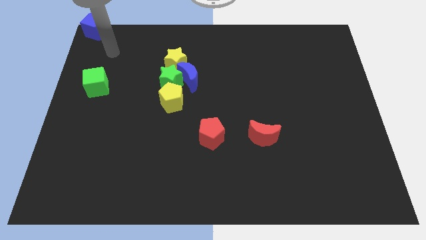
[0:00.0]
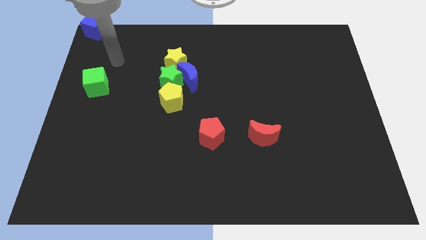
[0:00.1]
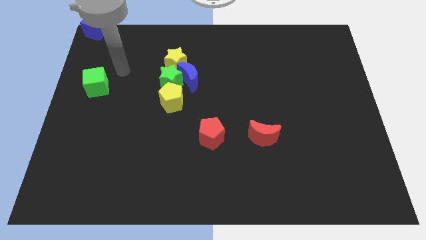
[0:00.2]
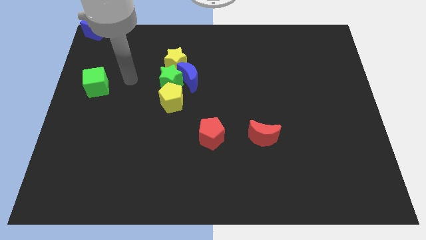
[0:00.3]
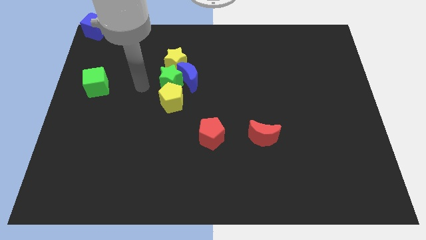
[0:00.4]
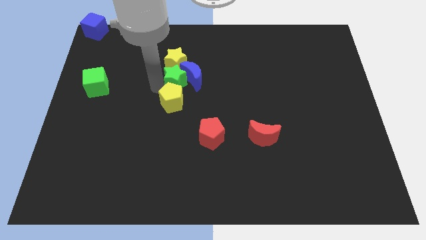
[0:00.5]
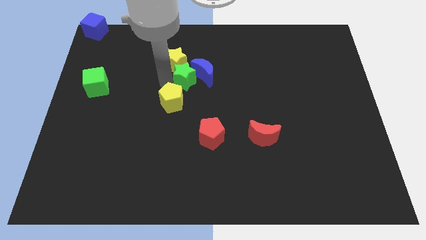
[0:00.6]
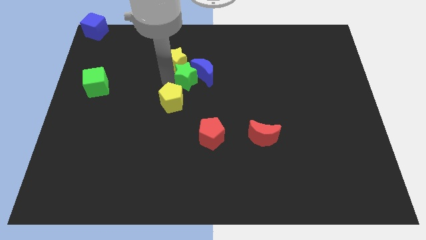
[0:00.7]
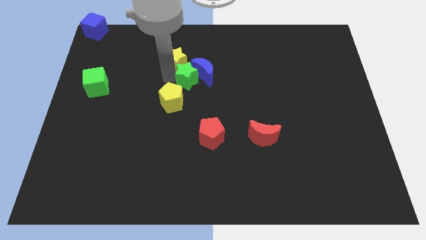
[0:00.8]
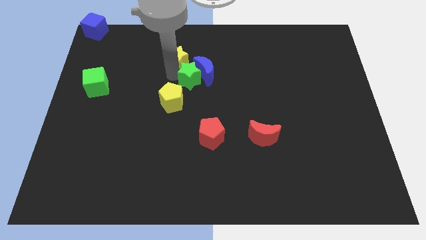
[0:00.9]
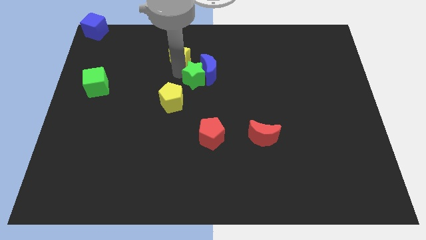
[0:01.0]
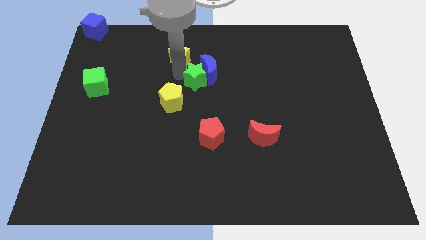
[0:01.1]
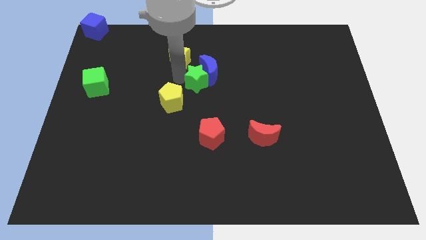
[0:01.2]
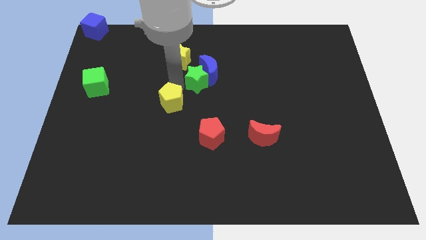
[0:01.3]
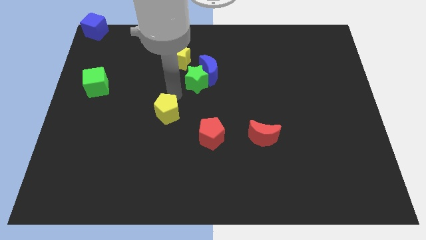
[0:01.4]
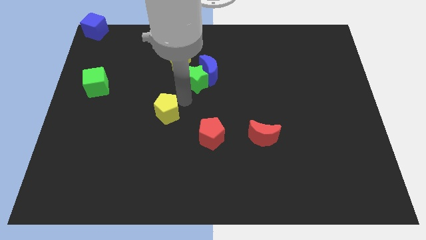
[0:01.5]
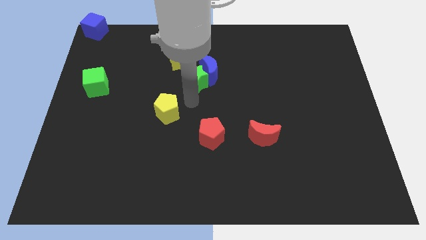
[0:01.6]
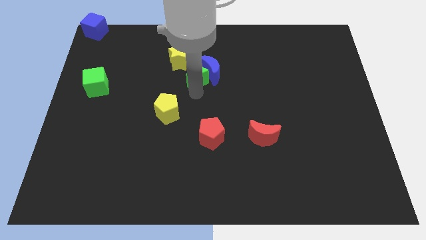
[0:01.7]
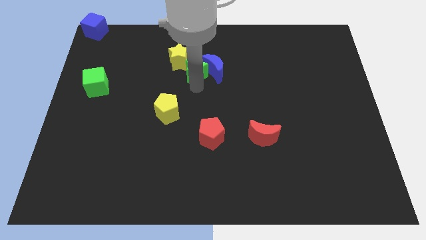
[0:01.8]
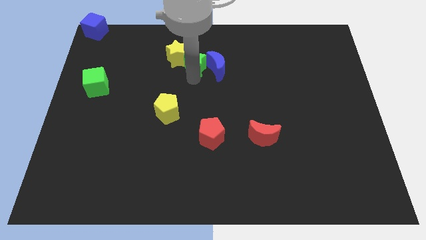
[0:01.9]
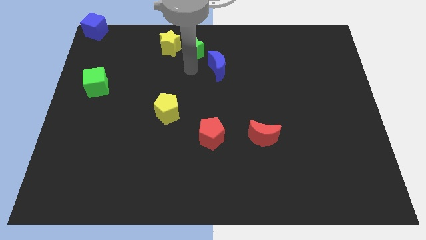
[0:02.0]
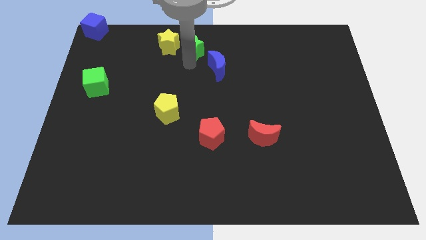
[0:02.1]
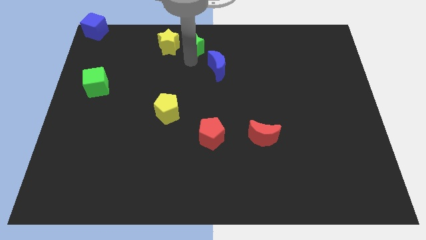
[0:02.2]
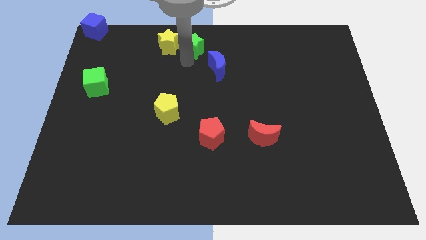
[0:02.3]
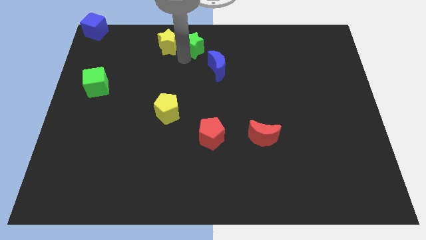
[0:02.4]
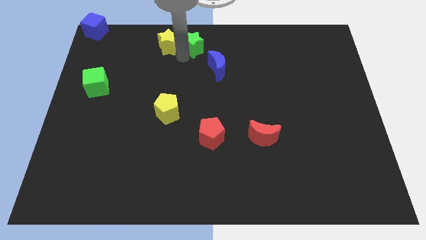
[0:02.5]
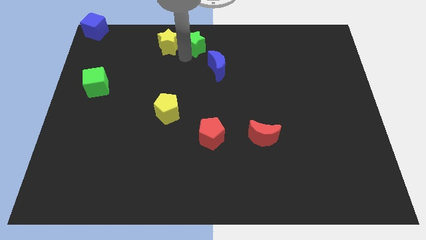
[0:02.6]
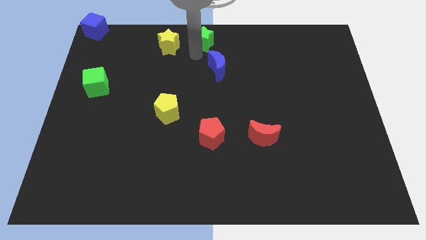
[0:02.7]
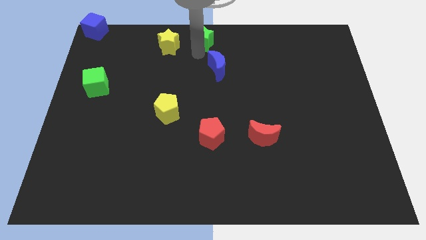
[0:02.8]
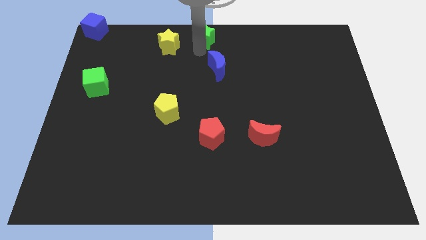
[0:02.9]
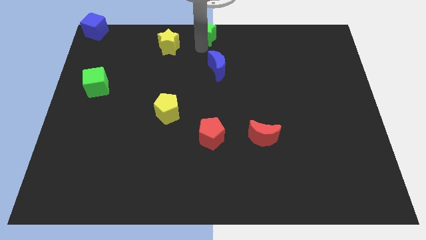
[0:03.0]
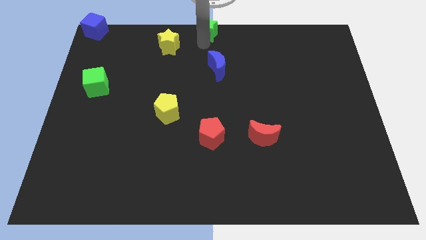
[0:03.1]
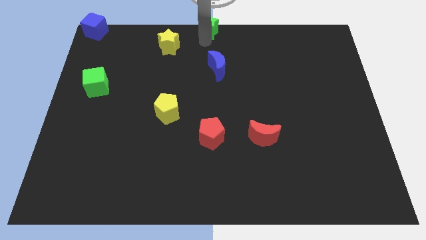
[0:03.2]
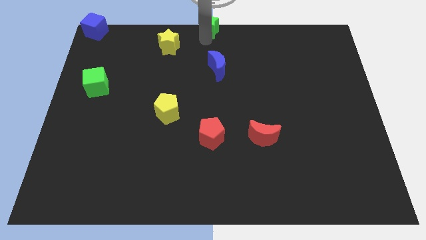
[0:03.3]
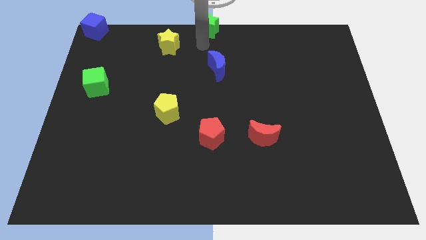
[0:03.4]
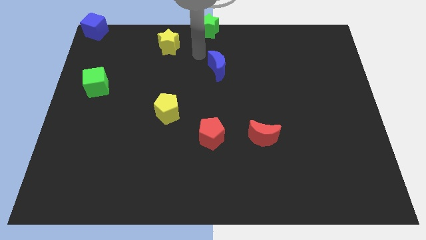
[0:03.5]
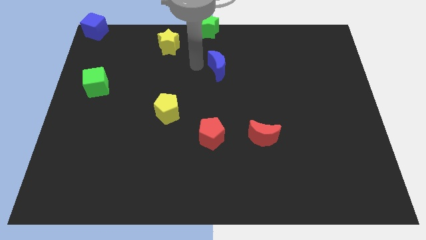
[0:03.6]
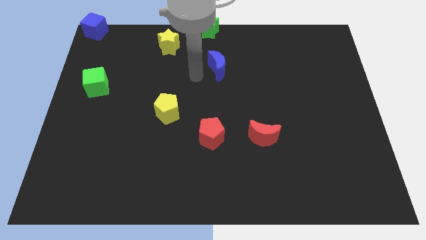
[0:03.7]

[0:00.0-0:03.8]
separate the yellow blocks green star and blue moon

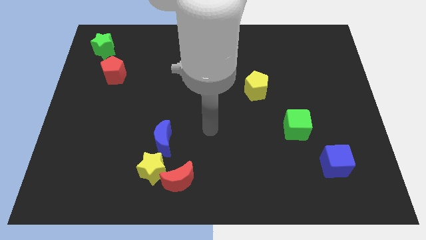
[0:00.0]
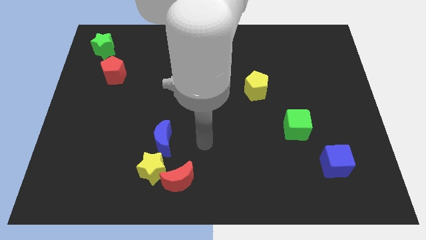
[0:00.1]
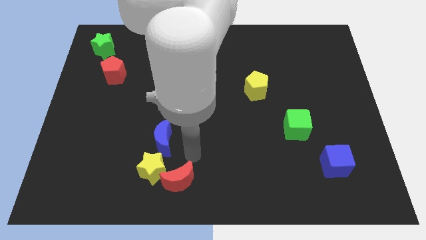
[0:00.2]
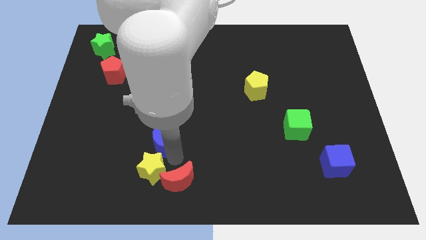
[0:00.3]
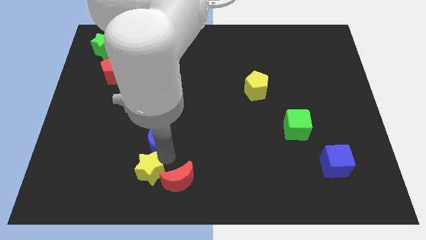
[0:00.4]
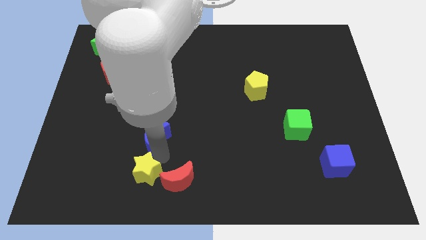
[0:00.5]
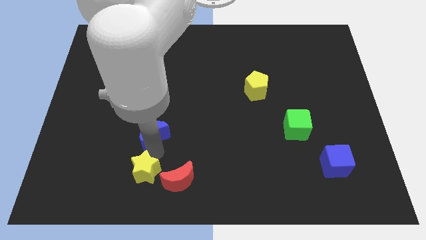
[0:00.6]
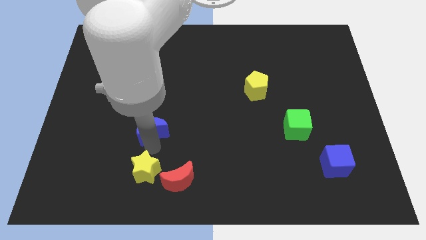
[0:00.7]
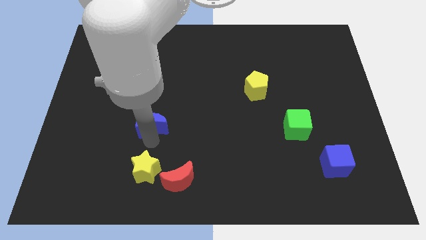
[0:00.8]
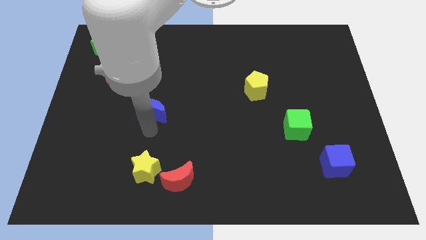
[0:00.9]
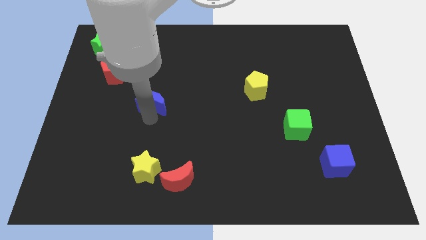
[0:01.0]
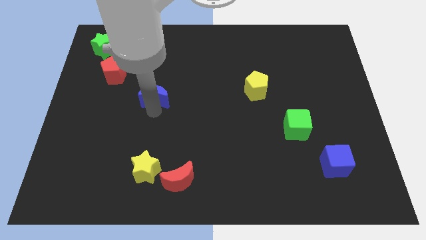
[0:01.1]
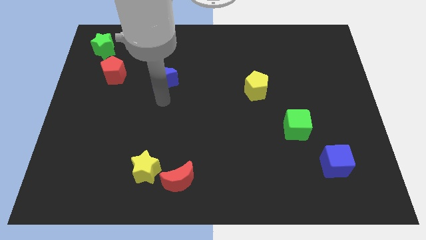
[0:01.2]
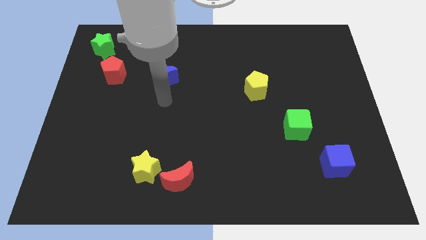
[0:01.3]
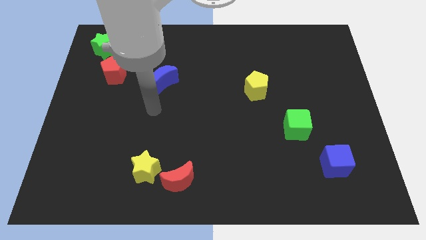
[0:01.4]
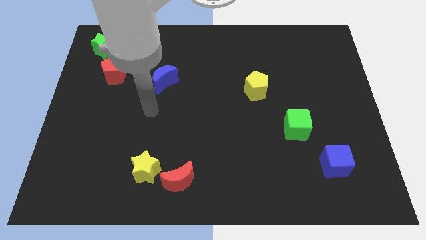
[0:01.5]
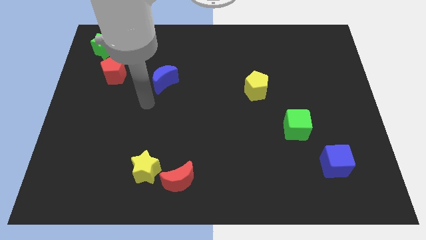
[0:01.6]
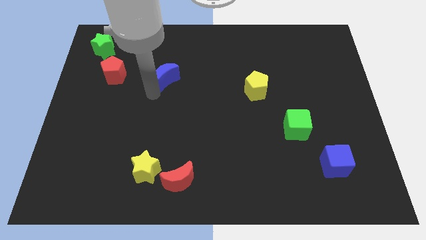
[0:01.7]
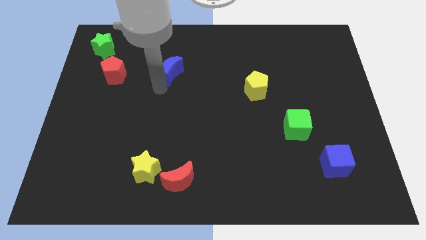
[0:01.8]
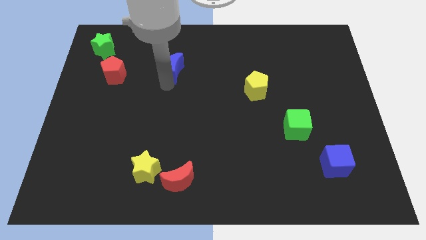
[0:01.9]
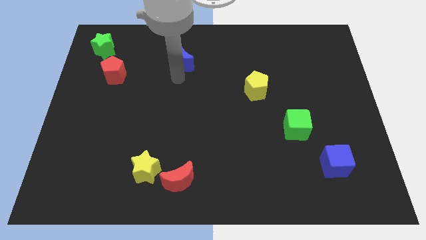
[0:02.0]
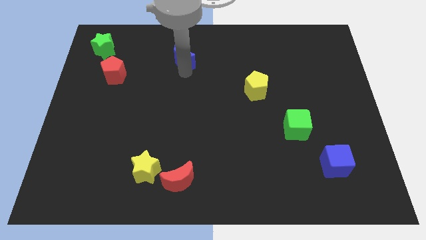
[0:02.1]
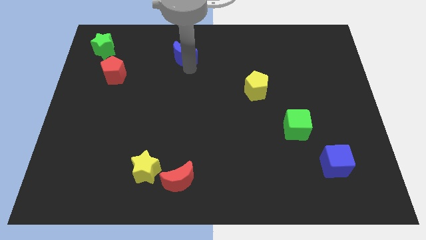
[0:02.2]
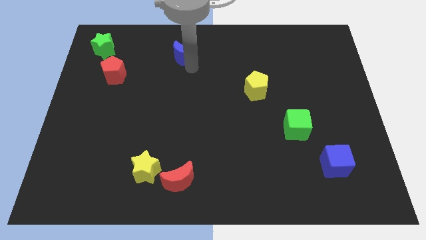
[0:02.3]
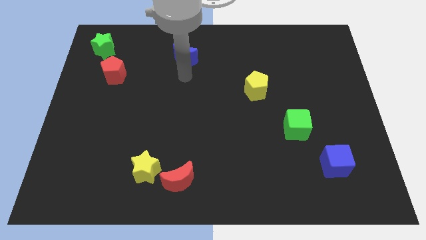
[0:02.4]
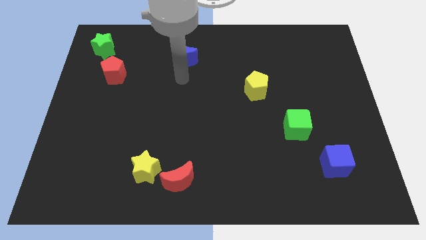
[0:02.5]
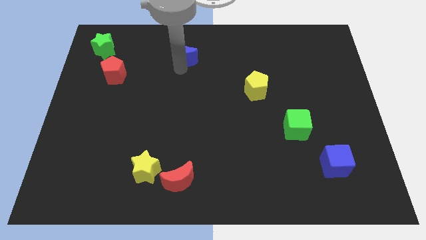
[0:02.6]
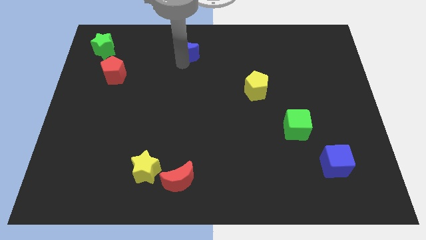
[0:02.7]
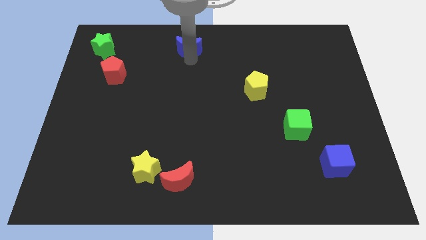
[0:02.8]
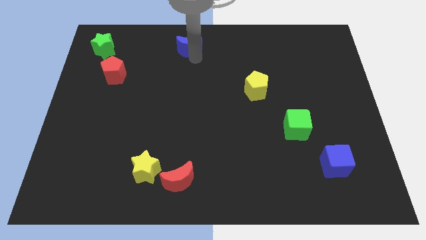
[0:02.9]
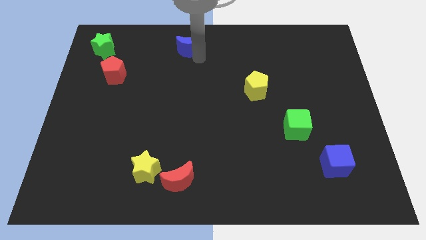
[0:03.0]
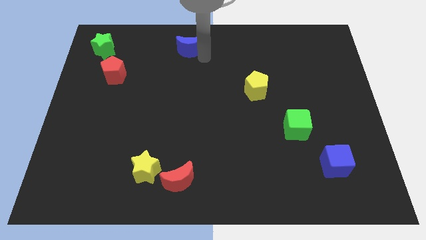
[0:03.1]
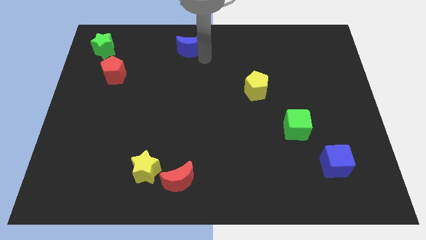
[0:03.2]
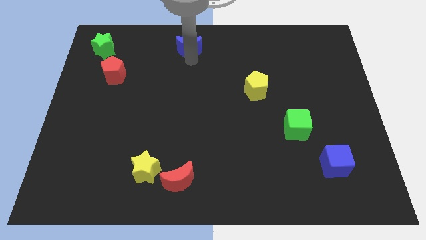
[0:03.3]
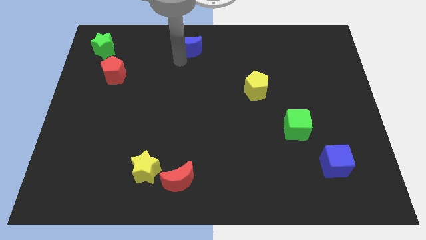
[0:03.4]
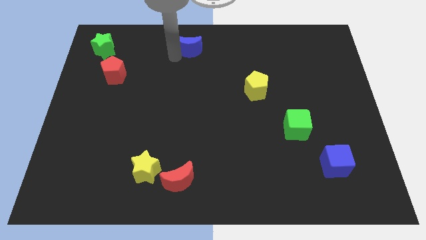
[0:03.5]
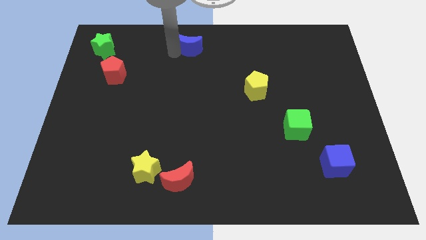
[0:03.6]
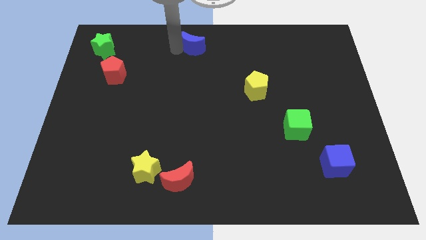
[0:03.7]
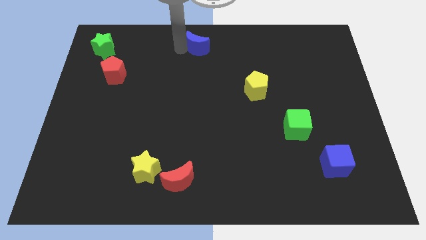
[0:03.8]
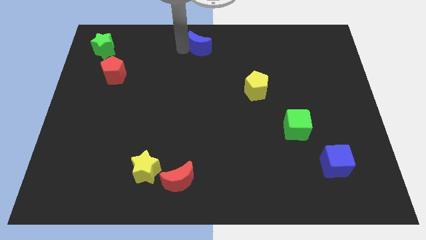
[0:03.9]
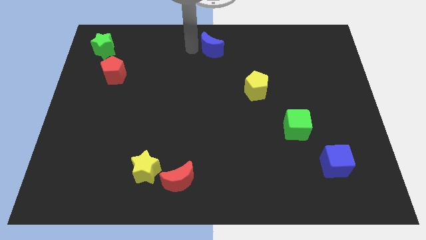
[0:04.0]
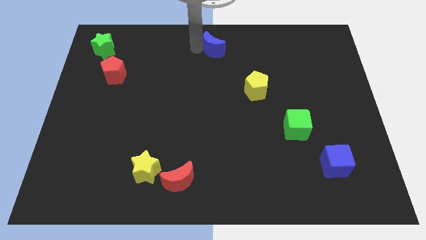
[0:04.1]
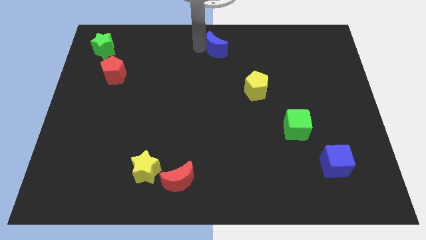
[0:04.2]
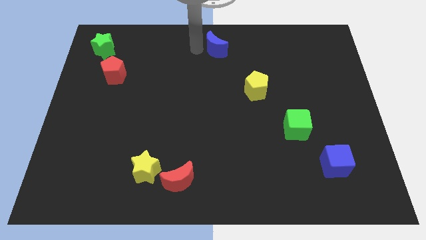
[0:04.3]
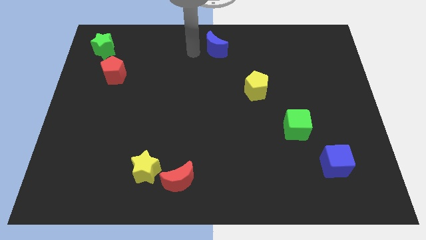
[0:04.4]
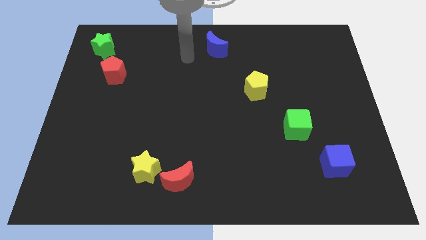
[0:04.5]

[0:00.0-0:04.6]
push the blue moon to the top middle

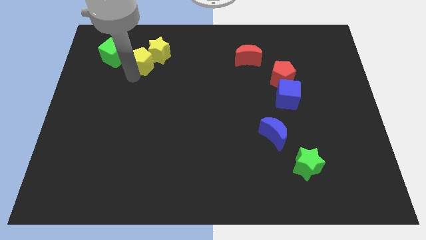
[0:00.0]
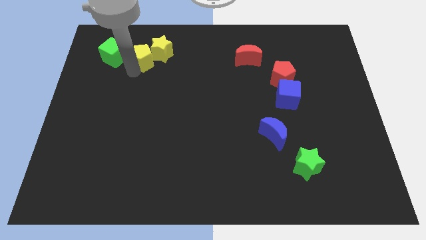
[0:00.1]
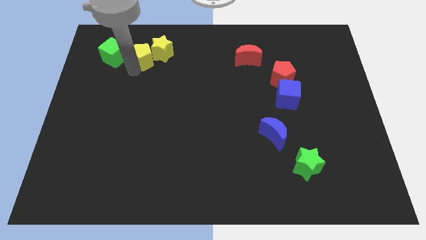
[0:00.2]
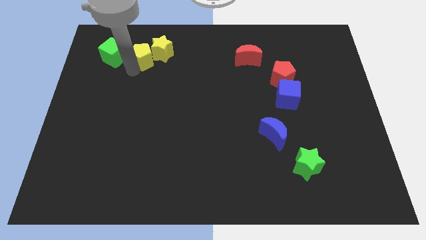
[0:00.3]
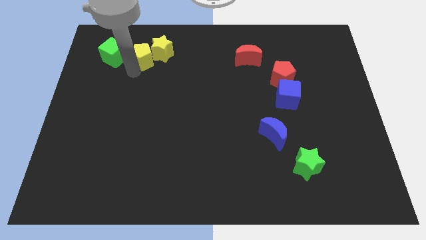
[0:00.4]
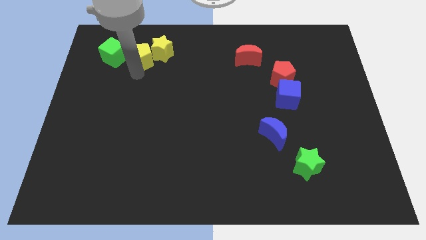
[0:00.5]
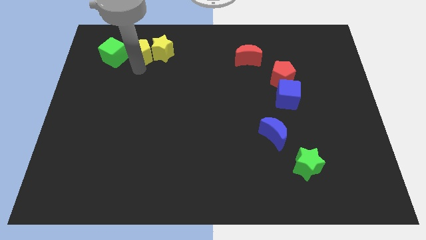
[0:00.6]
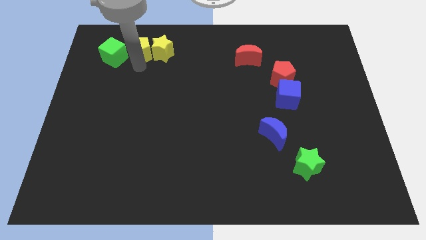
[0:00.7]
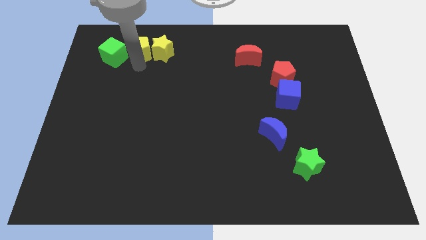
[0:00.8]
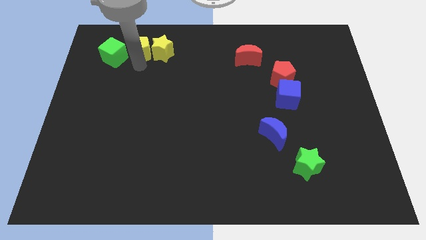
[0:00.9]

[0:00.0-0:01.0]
place the yellow pentagon in between the yellow star and green cube
